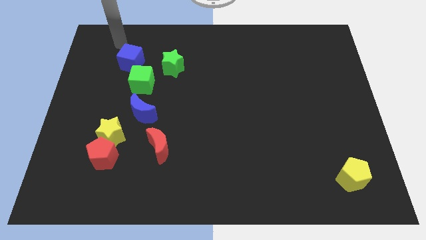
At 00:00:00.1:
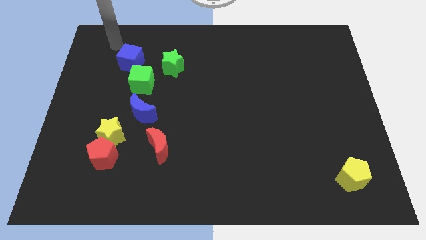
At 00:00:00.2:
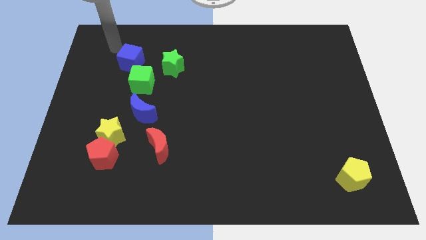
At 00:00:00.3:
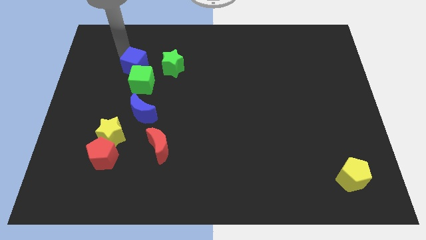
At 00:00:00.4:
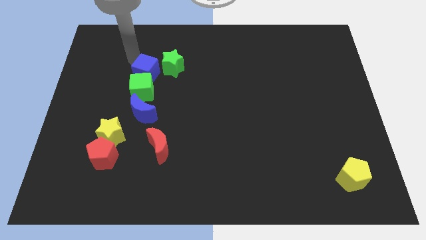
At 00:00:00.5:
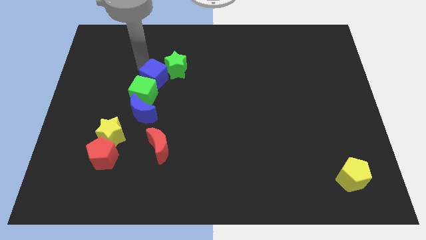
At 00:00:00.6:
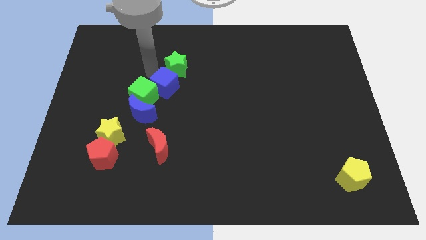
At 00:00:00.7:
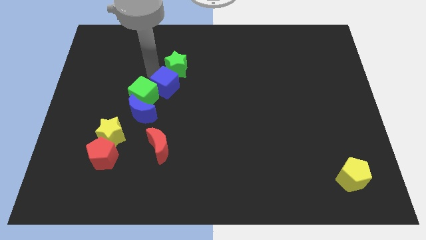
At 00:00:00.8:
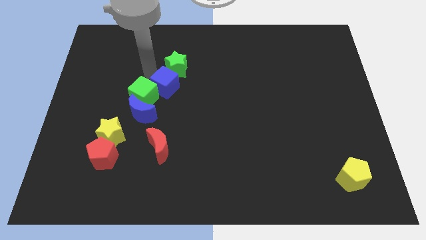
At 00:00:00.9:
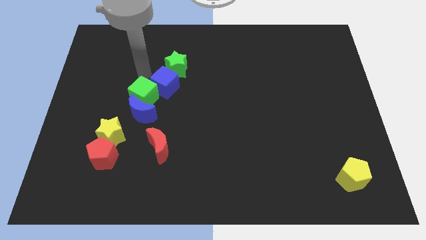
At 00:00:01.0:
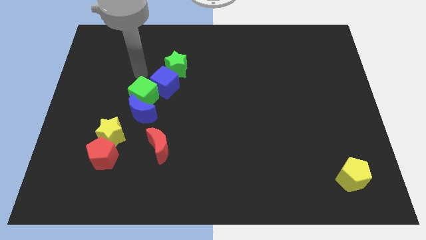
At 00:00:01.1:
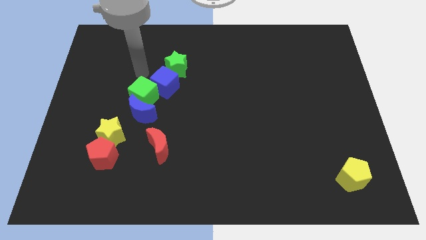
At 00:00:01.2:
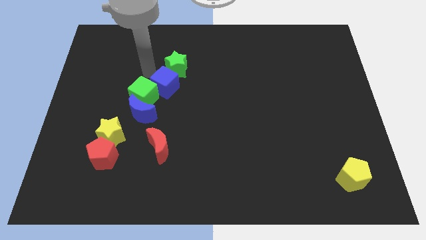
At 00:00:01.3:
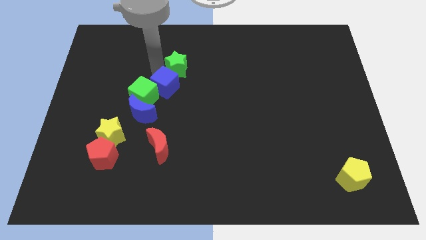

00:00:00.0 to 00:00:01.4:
push the blue cube into green cube

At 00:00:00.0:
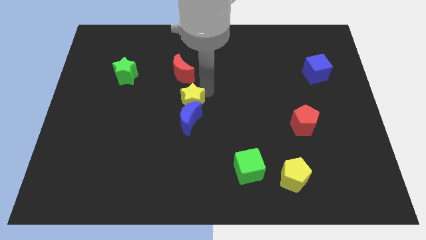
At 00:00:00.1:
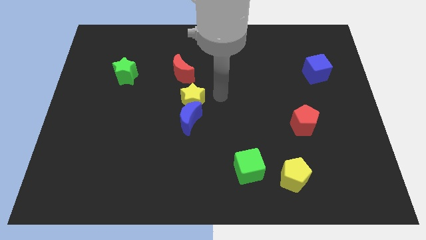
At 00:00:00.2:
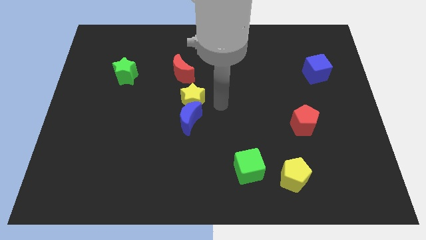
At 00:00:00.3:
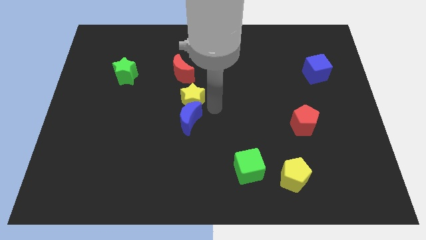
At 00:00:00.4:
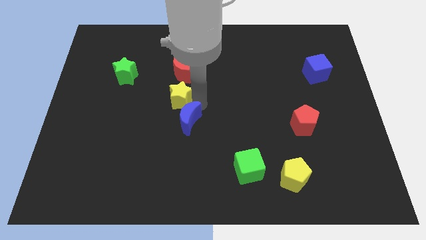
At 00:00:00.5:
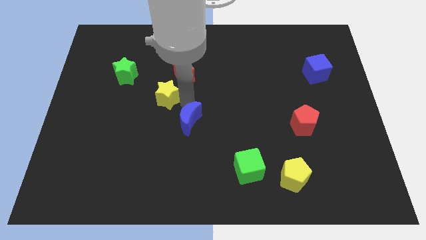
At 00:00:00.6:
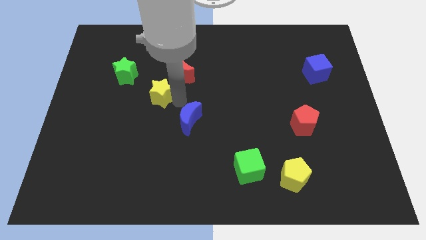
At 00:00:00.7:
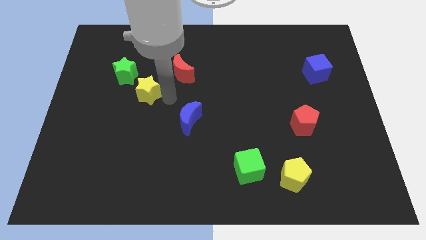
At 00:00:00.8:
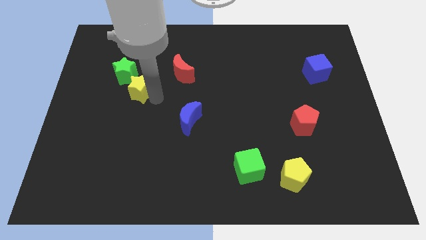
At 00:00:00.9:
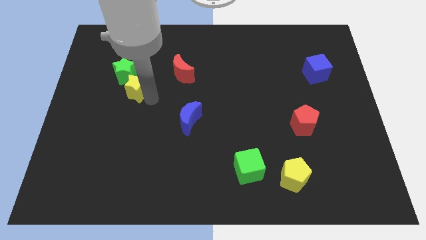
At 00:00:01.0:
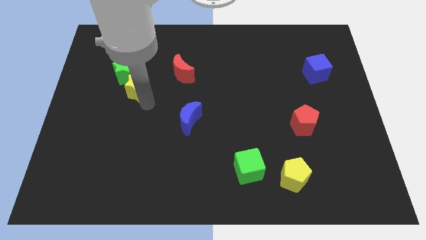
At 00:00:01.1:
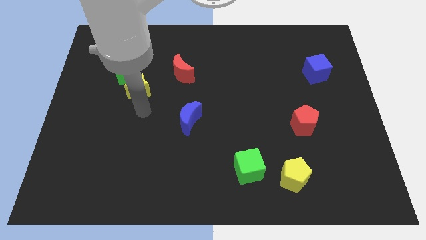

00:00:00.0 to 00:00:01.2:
push the yellow star close to the green star

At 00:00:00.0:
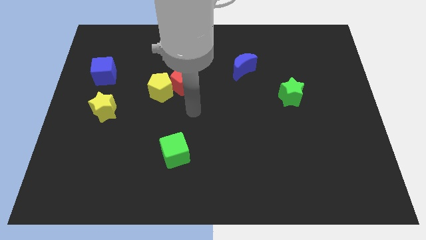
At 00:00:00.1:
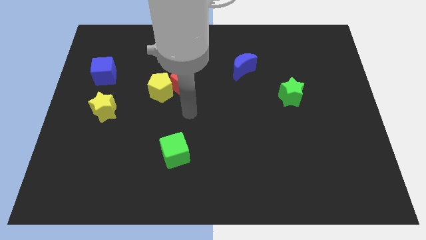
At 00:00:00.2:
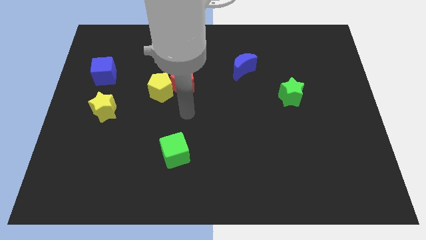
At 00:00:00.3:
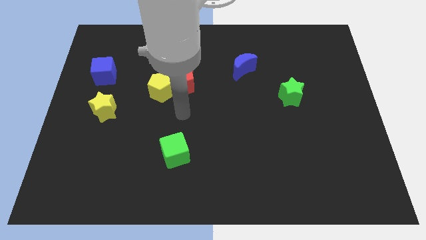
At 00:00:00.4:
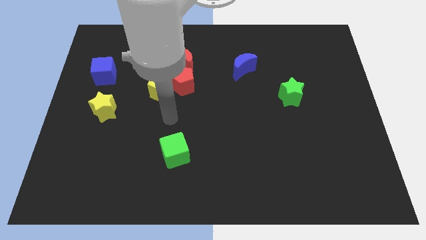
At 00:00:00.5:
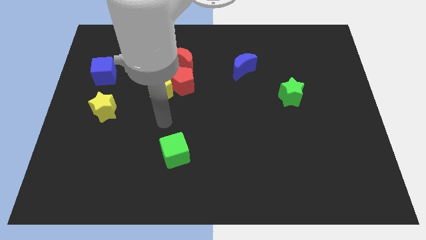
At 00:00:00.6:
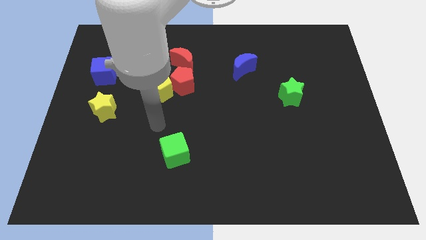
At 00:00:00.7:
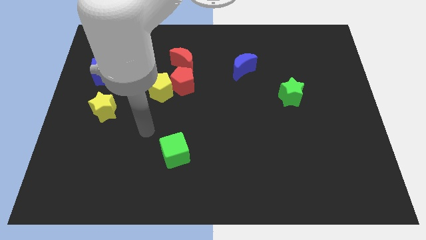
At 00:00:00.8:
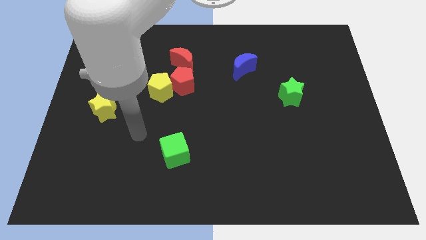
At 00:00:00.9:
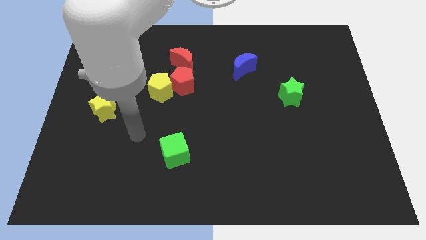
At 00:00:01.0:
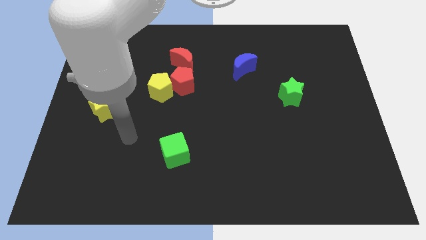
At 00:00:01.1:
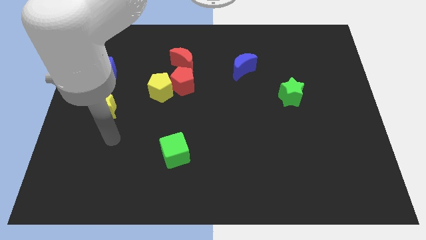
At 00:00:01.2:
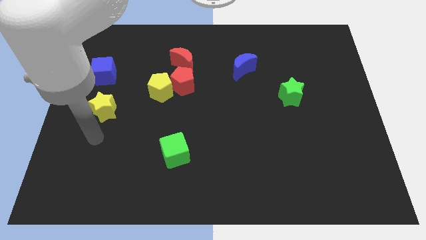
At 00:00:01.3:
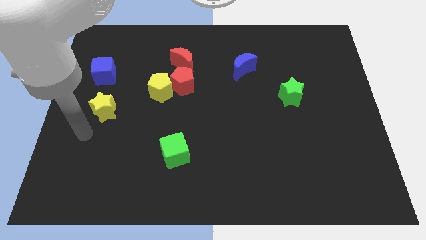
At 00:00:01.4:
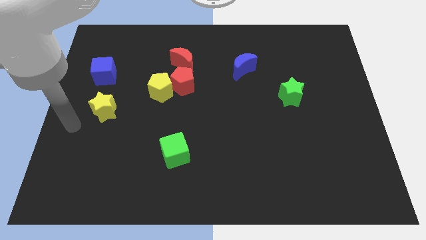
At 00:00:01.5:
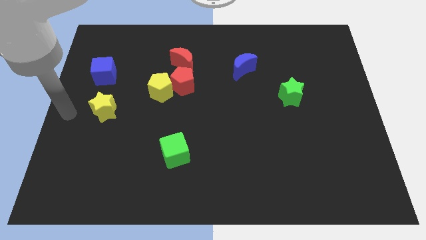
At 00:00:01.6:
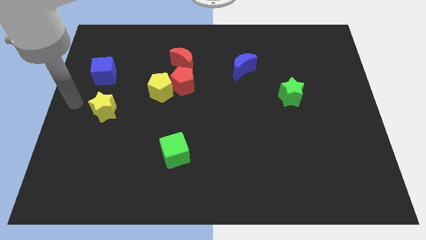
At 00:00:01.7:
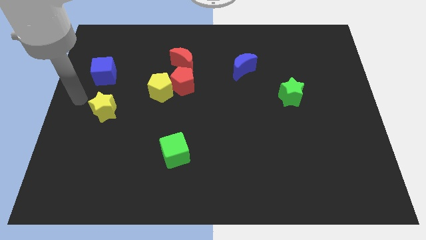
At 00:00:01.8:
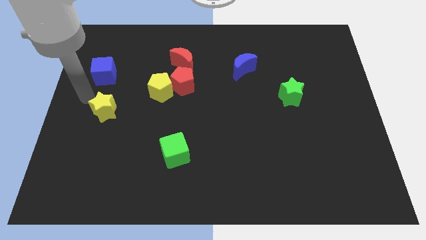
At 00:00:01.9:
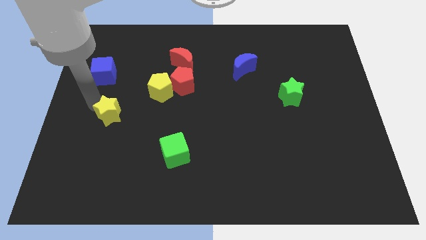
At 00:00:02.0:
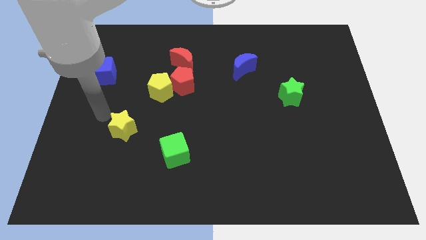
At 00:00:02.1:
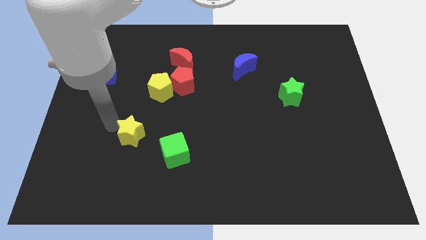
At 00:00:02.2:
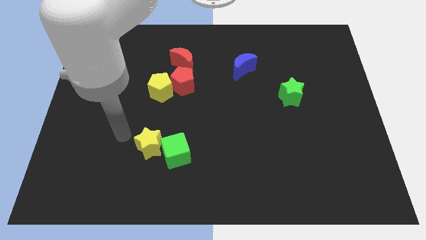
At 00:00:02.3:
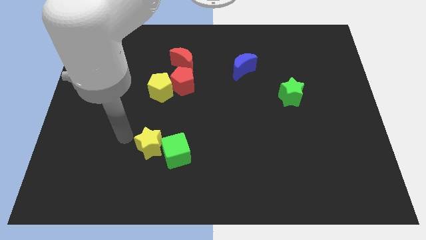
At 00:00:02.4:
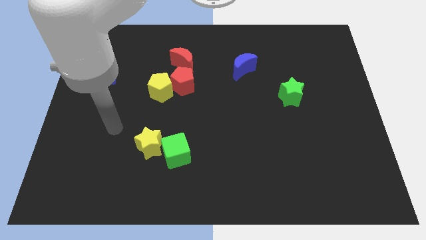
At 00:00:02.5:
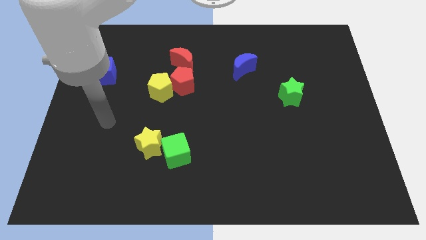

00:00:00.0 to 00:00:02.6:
push yellow star below yellow pentagon

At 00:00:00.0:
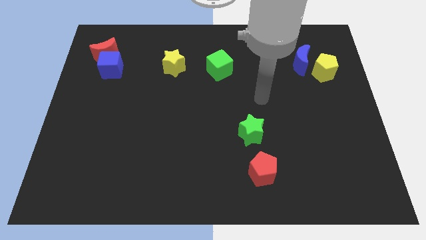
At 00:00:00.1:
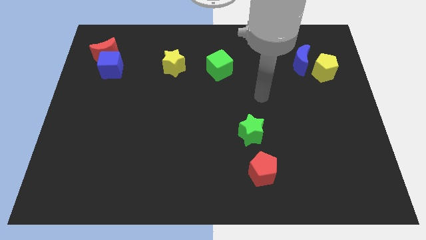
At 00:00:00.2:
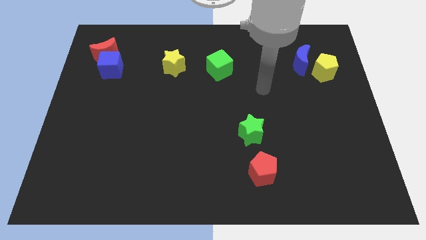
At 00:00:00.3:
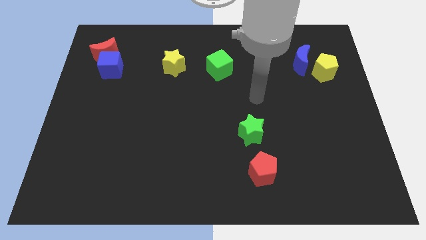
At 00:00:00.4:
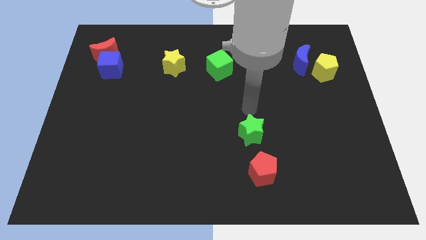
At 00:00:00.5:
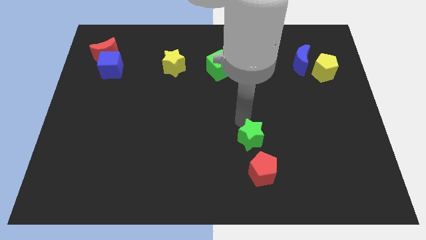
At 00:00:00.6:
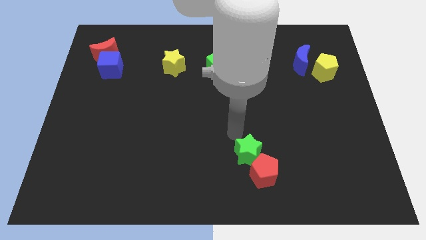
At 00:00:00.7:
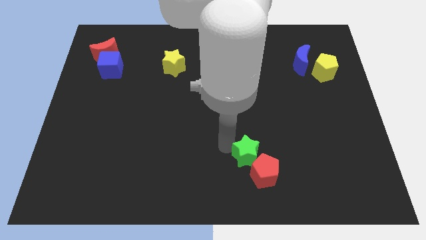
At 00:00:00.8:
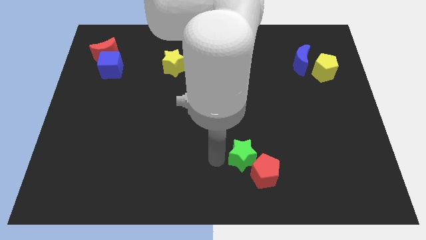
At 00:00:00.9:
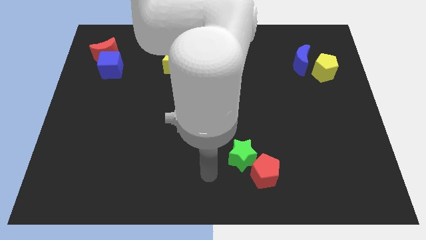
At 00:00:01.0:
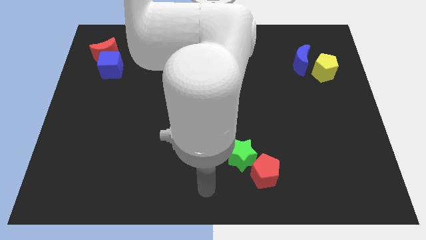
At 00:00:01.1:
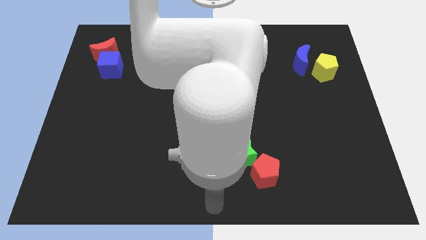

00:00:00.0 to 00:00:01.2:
push the green star to the left of the red pentagon

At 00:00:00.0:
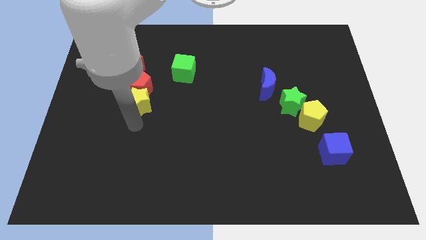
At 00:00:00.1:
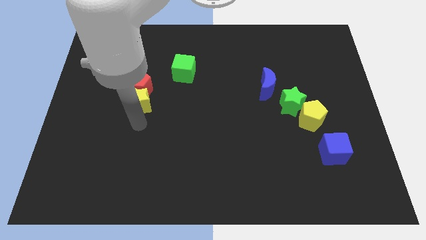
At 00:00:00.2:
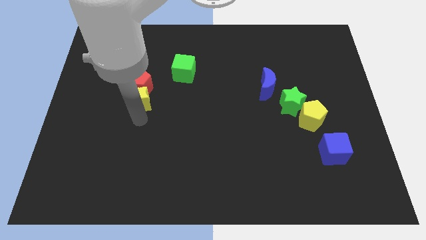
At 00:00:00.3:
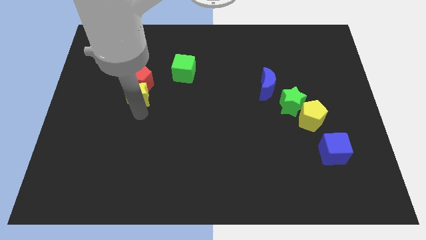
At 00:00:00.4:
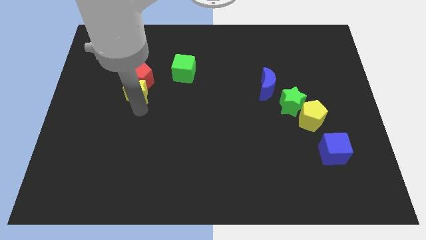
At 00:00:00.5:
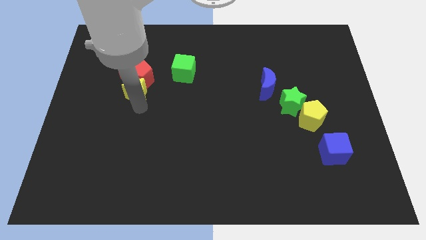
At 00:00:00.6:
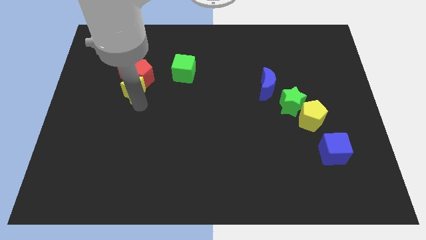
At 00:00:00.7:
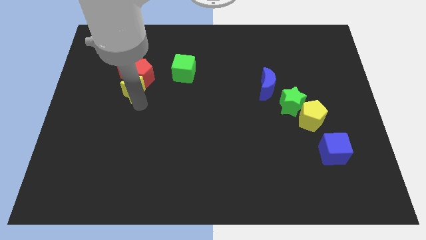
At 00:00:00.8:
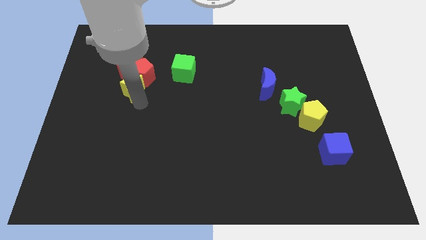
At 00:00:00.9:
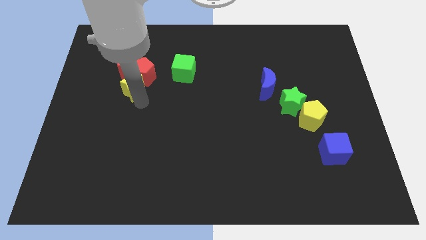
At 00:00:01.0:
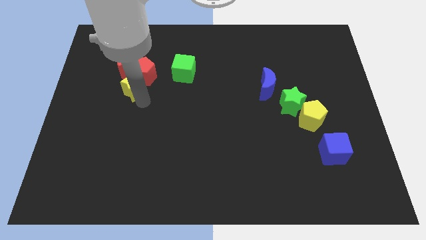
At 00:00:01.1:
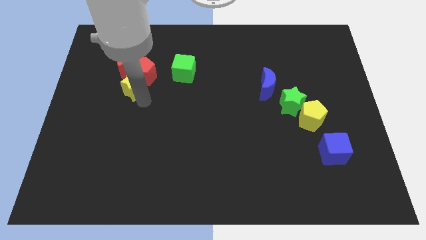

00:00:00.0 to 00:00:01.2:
push the yellow star into the red blocks

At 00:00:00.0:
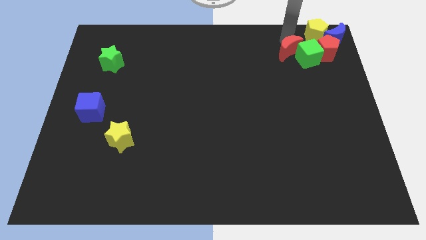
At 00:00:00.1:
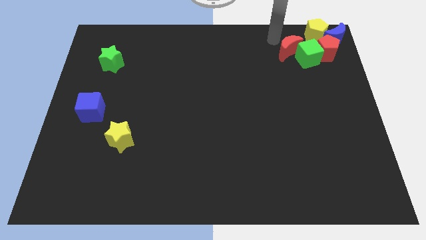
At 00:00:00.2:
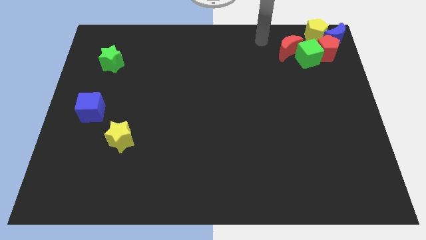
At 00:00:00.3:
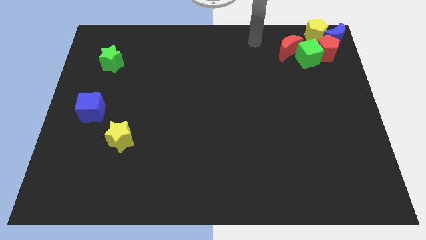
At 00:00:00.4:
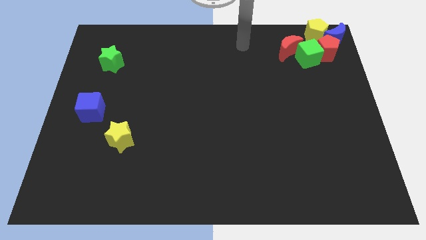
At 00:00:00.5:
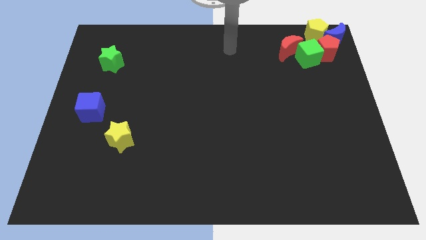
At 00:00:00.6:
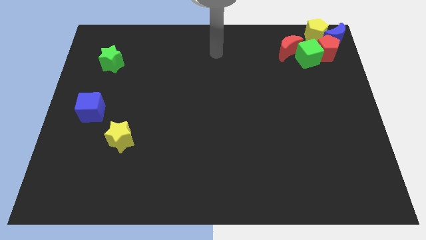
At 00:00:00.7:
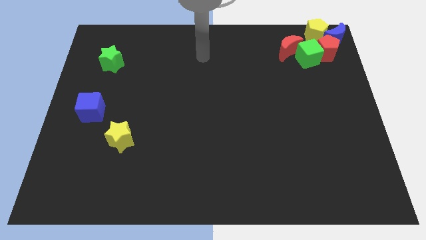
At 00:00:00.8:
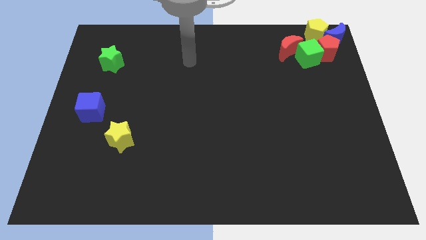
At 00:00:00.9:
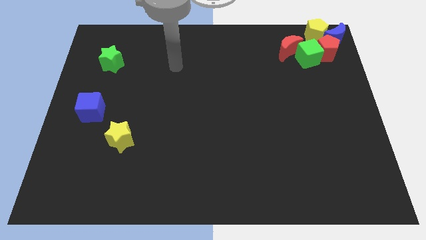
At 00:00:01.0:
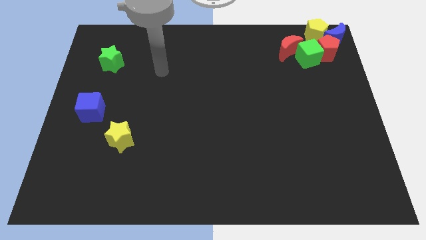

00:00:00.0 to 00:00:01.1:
move your arm away from the red moon
